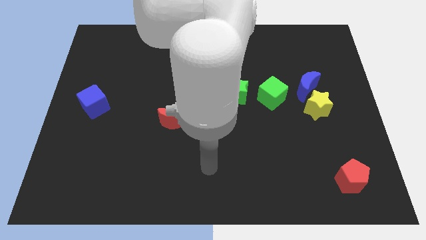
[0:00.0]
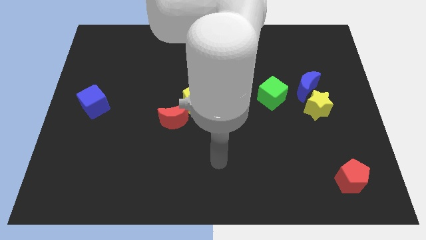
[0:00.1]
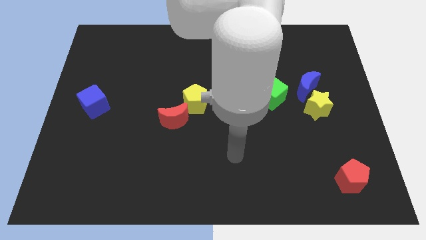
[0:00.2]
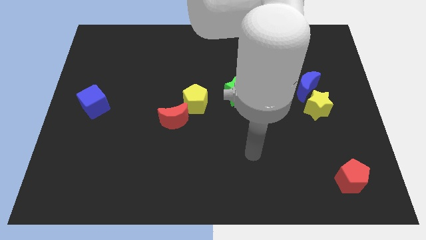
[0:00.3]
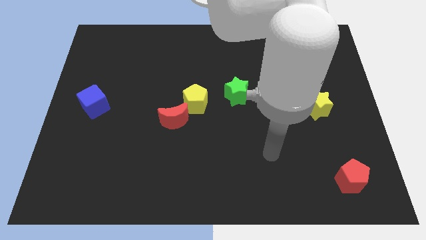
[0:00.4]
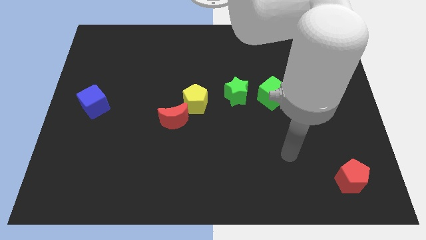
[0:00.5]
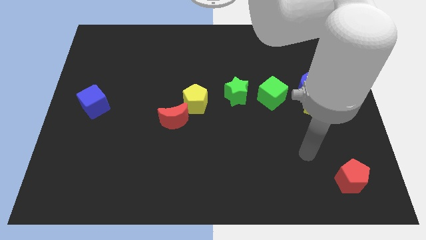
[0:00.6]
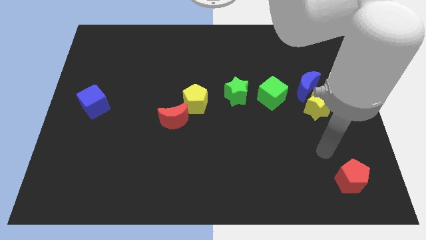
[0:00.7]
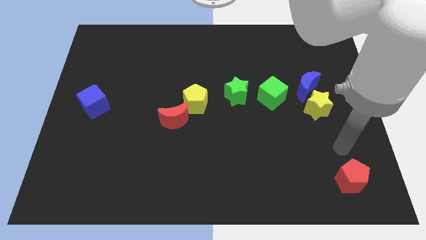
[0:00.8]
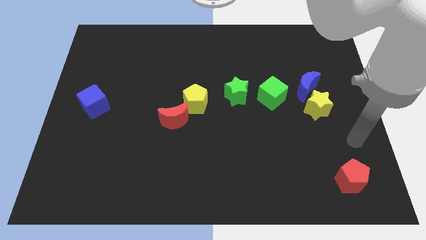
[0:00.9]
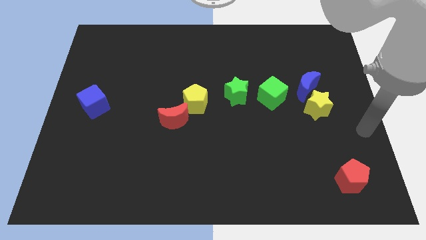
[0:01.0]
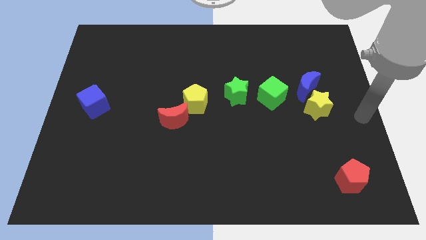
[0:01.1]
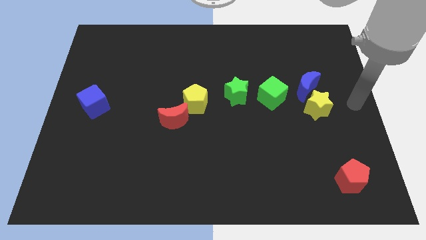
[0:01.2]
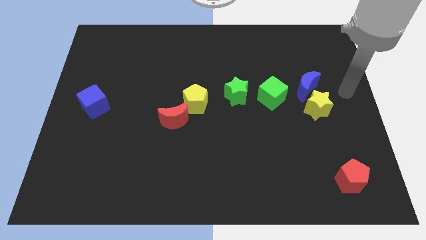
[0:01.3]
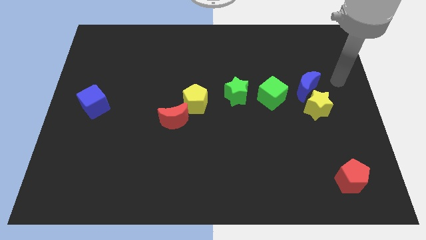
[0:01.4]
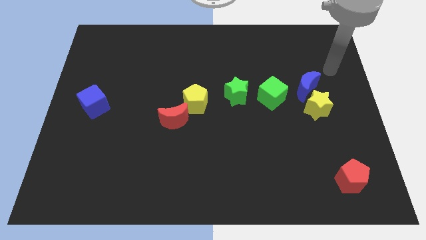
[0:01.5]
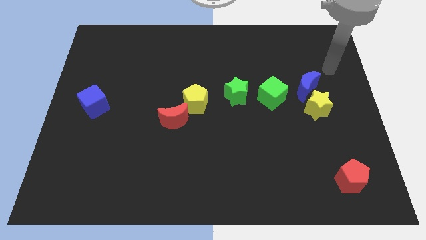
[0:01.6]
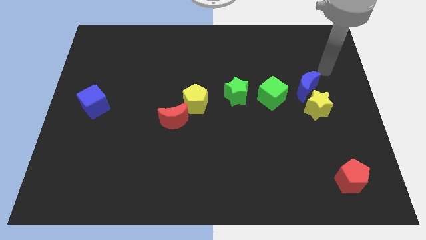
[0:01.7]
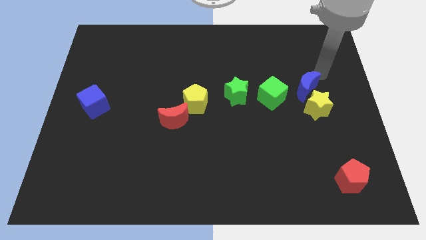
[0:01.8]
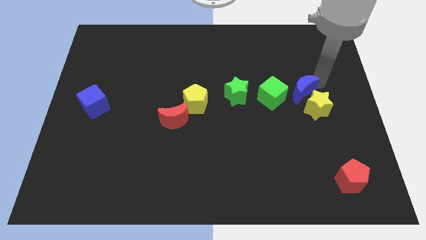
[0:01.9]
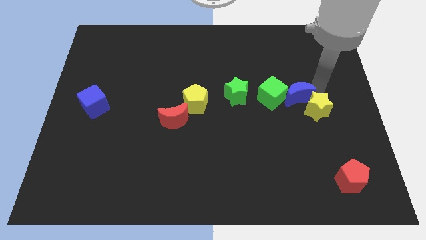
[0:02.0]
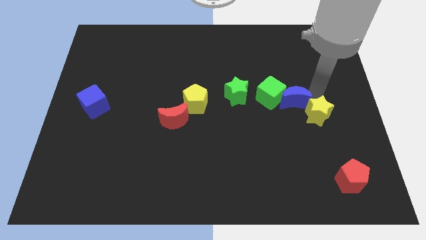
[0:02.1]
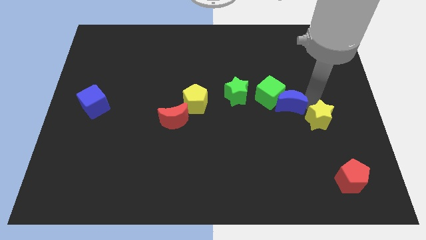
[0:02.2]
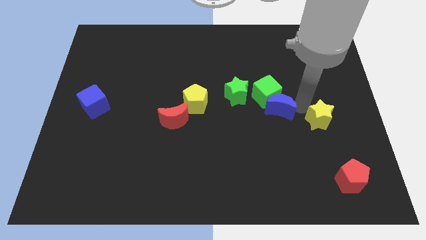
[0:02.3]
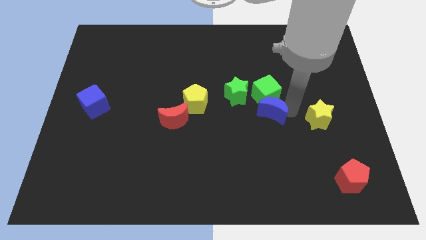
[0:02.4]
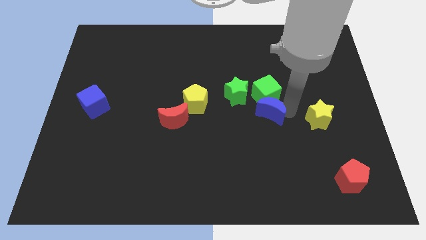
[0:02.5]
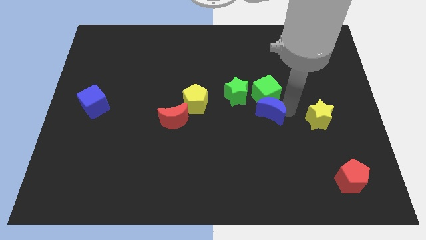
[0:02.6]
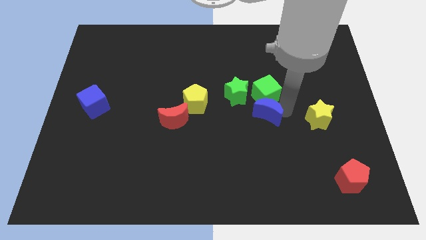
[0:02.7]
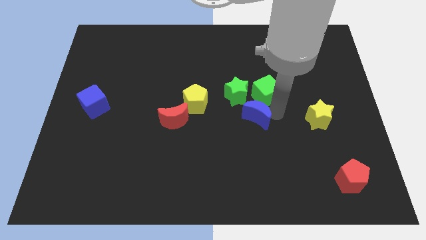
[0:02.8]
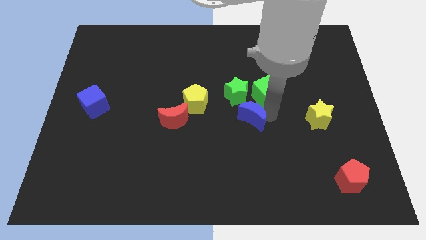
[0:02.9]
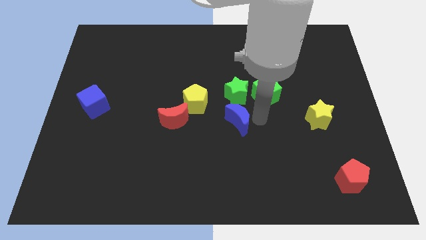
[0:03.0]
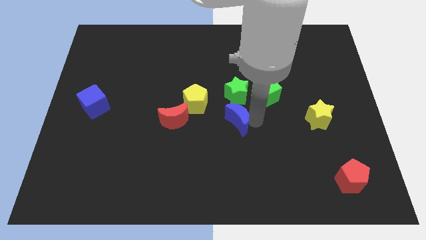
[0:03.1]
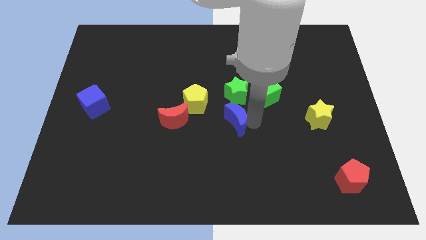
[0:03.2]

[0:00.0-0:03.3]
put the blue moon below the green star

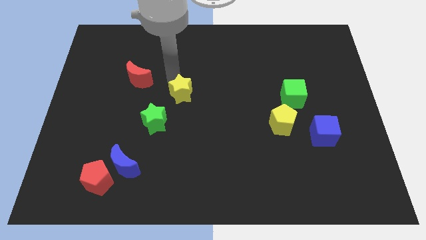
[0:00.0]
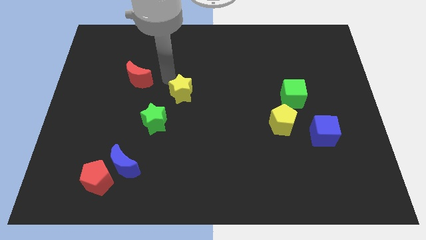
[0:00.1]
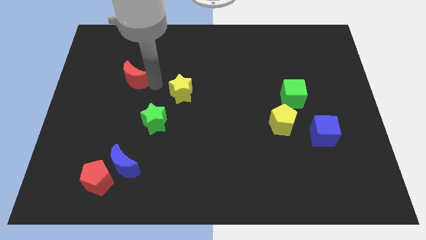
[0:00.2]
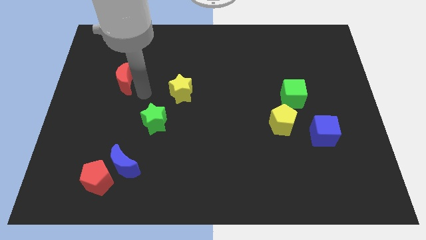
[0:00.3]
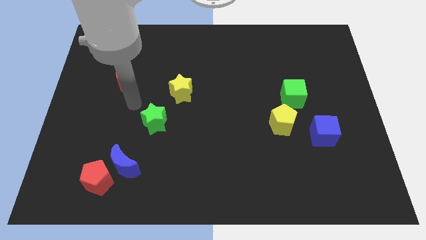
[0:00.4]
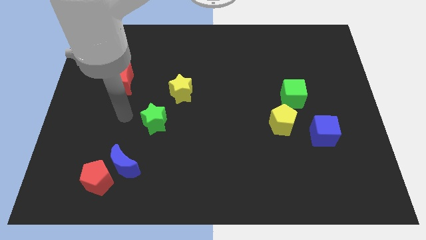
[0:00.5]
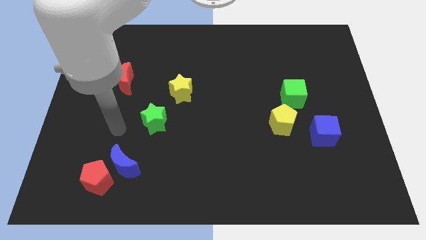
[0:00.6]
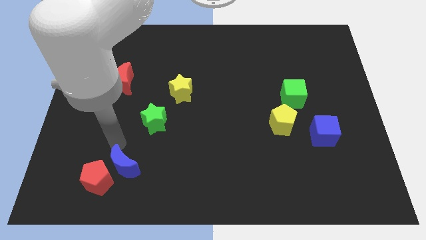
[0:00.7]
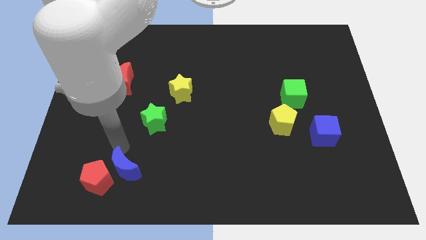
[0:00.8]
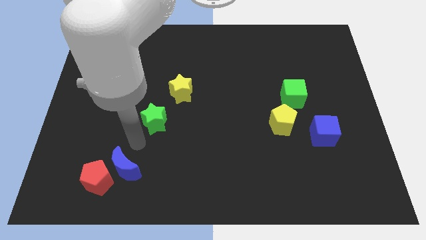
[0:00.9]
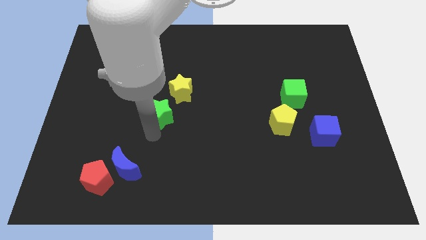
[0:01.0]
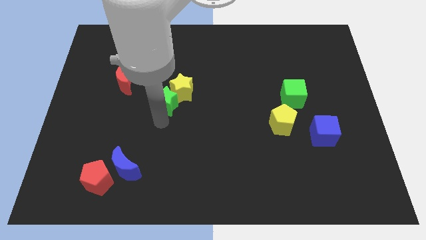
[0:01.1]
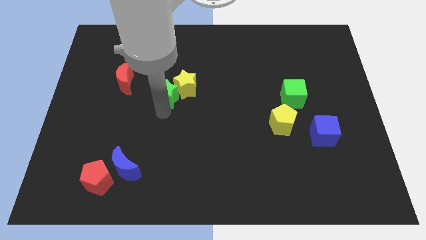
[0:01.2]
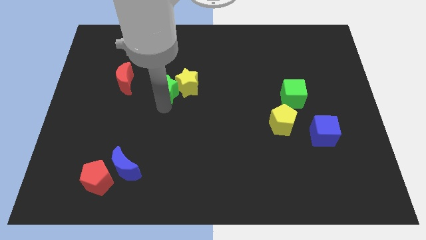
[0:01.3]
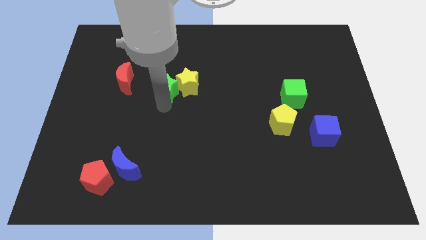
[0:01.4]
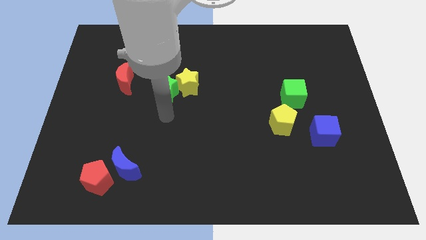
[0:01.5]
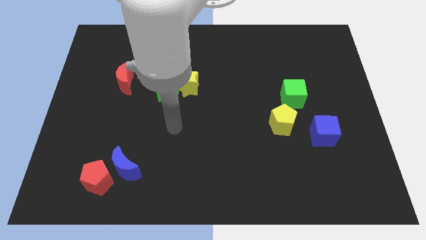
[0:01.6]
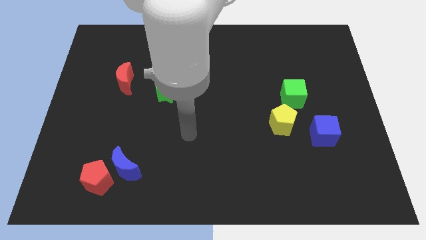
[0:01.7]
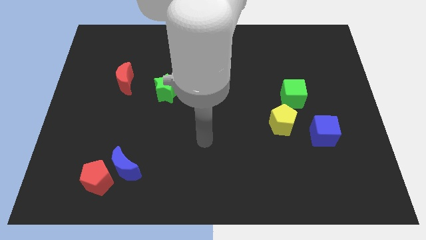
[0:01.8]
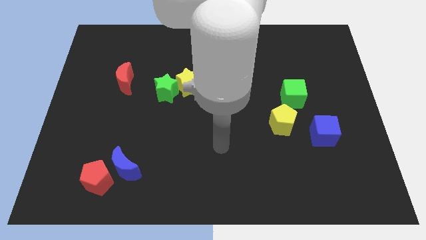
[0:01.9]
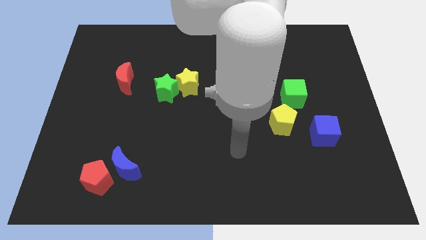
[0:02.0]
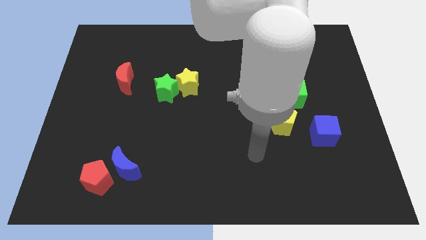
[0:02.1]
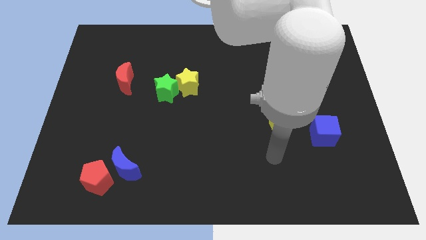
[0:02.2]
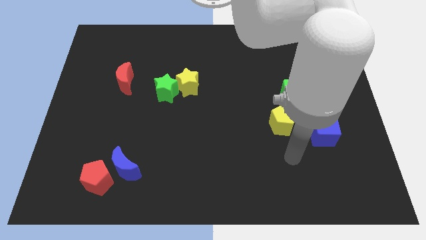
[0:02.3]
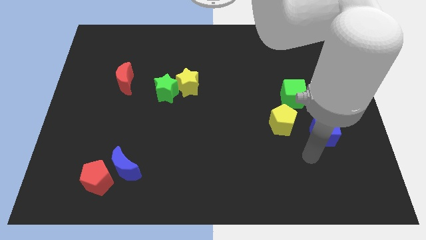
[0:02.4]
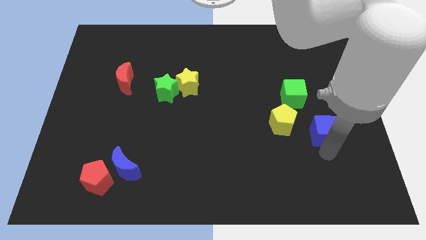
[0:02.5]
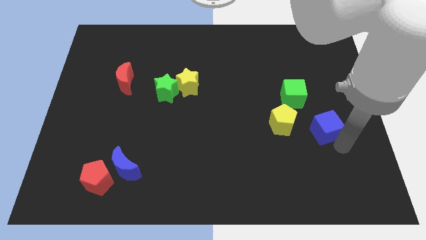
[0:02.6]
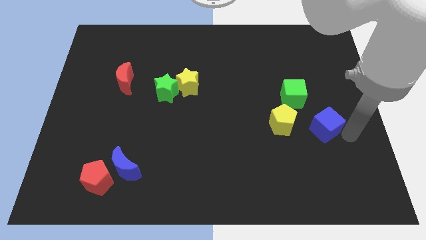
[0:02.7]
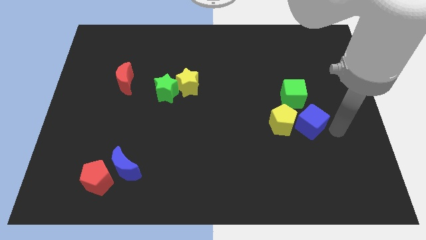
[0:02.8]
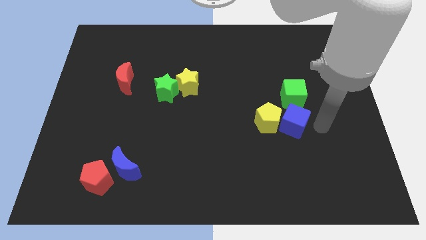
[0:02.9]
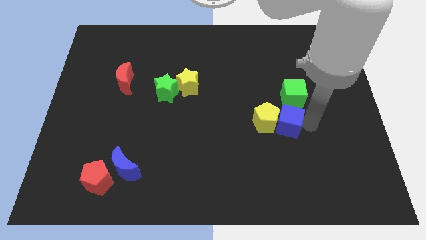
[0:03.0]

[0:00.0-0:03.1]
push the blue cube into the yellow pentagon

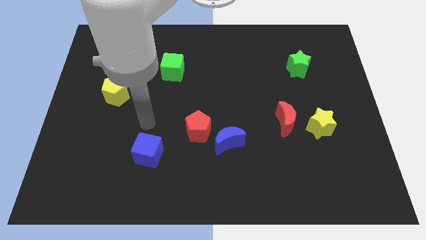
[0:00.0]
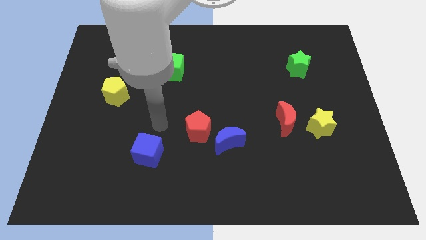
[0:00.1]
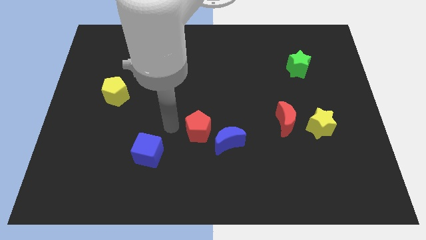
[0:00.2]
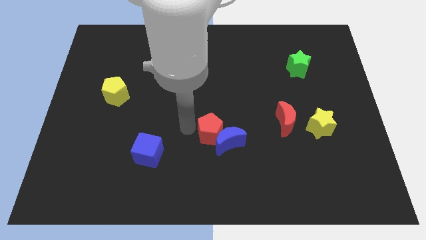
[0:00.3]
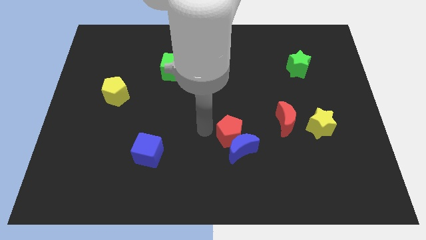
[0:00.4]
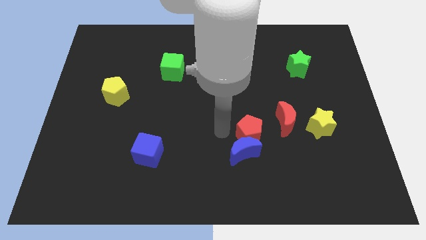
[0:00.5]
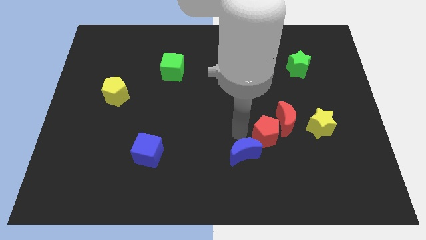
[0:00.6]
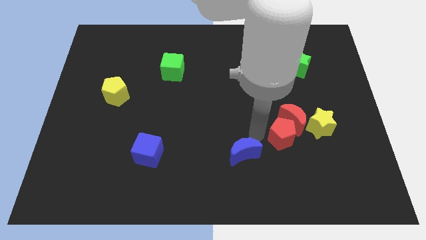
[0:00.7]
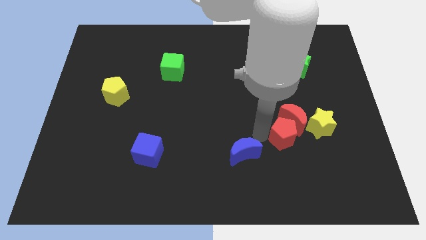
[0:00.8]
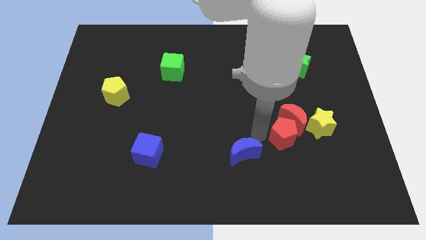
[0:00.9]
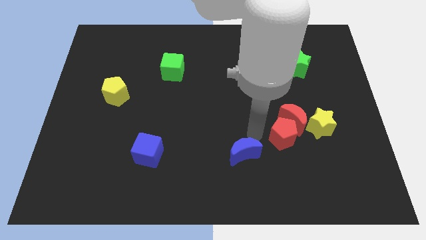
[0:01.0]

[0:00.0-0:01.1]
push the red pentagon into the red crescent

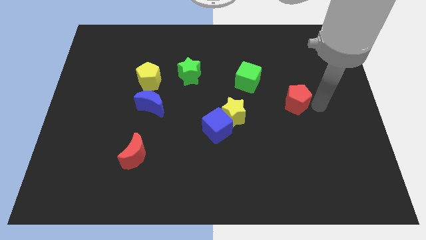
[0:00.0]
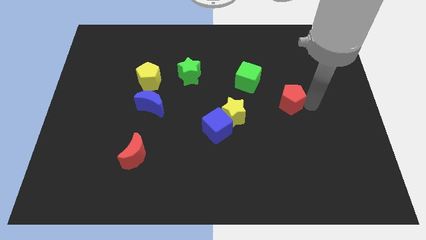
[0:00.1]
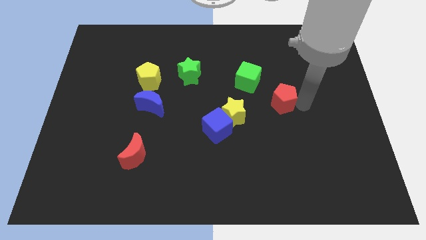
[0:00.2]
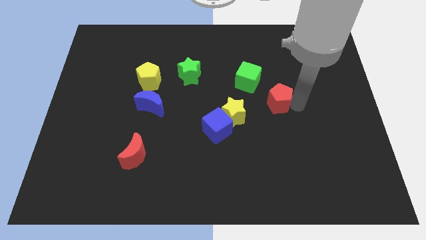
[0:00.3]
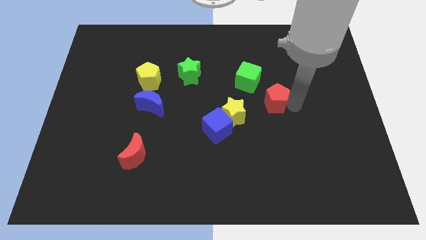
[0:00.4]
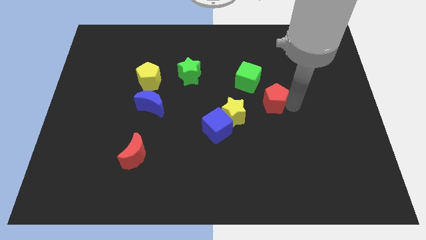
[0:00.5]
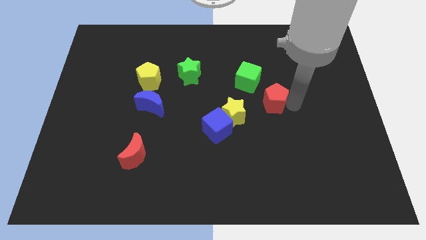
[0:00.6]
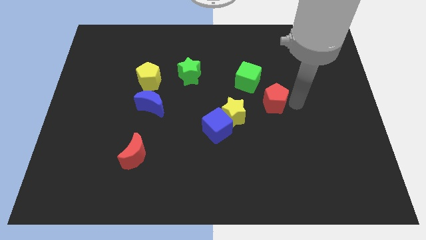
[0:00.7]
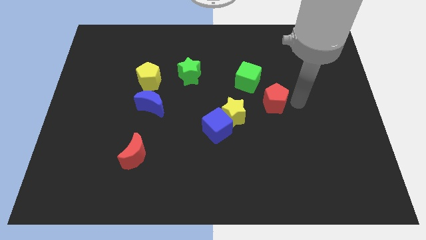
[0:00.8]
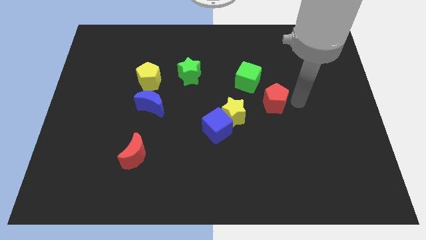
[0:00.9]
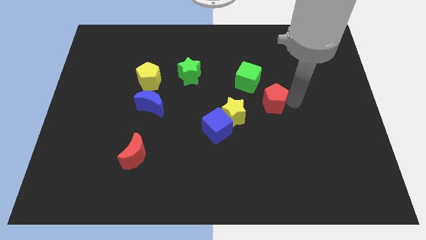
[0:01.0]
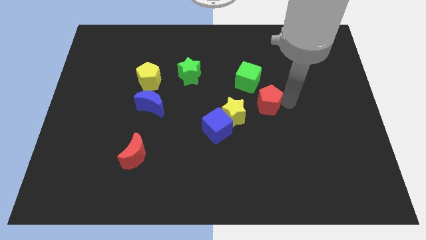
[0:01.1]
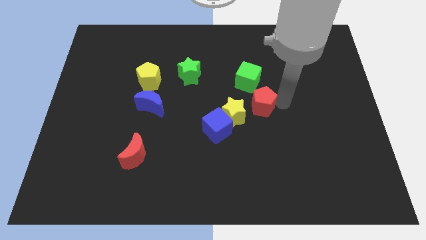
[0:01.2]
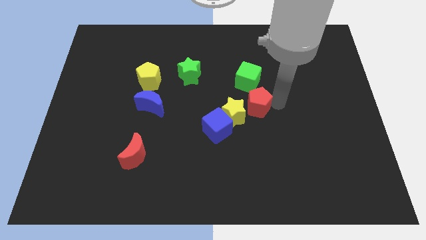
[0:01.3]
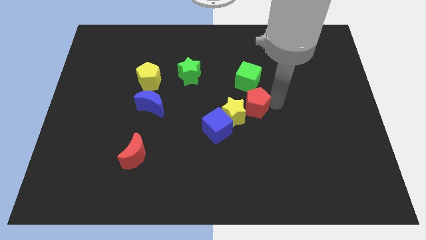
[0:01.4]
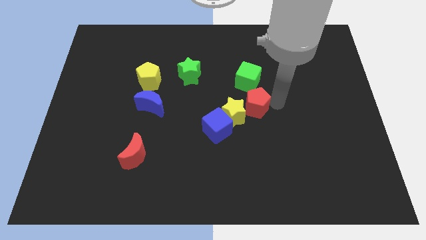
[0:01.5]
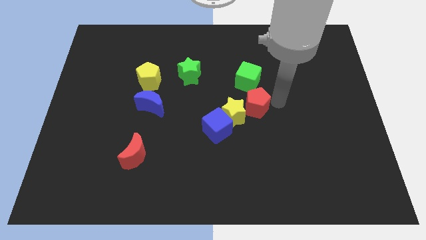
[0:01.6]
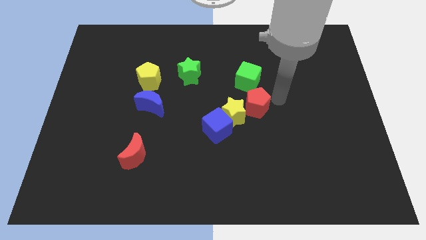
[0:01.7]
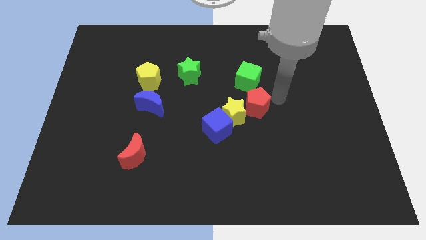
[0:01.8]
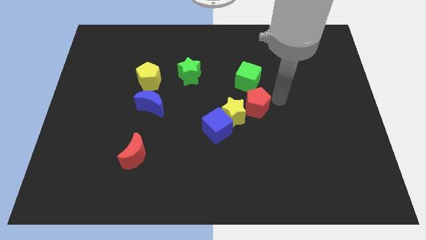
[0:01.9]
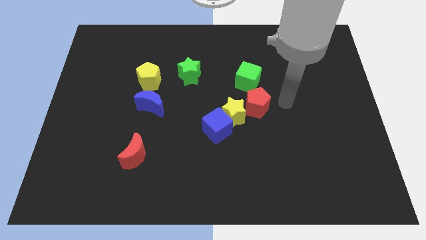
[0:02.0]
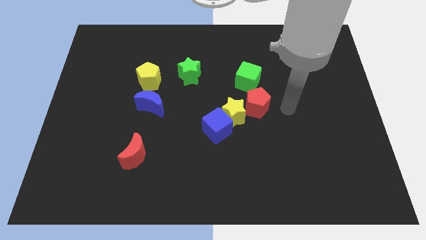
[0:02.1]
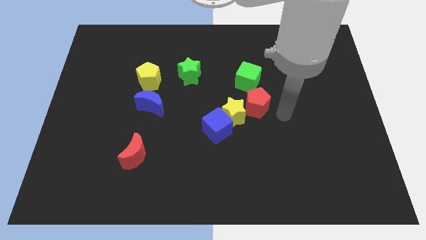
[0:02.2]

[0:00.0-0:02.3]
move the red pentagon right to the yellow star
